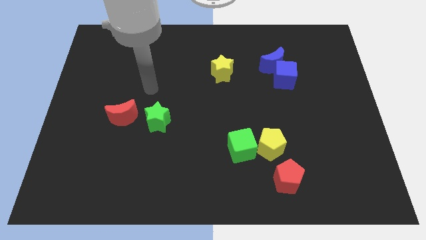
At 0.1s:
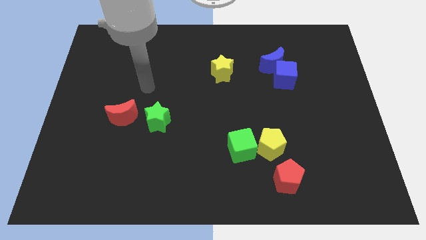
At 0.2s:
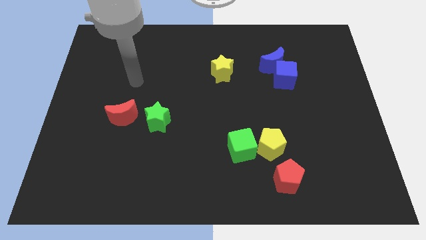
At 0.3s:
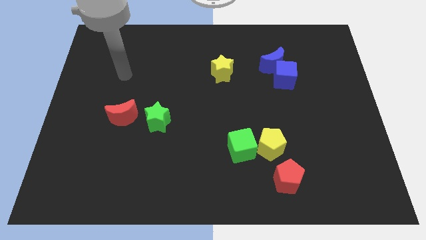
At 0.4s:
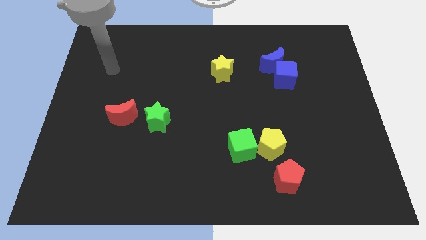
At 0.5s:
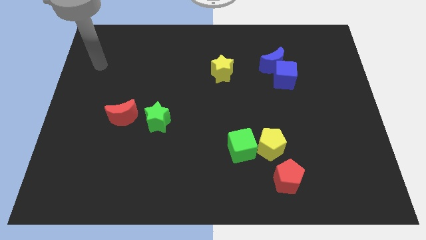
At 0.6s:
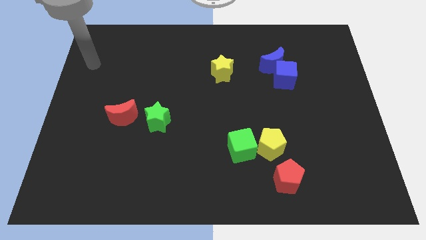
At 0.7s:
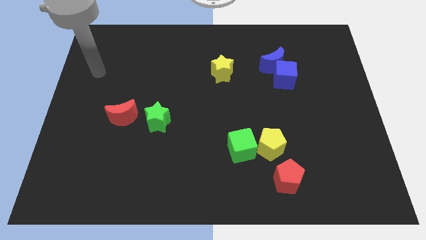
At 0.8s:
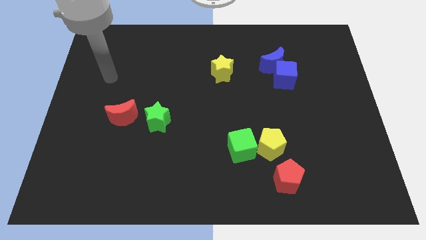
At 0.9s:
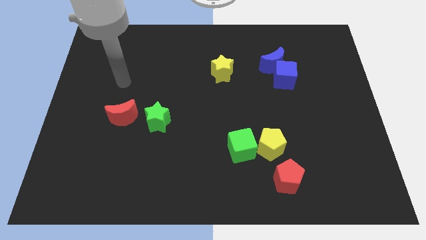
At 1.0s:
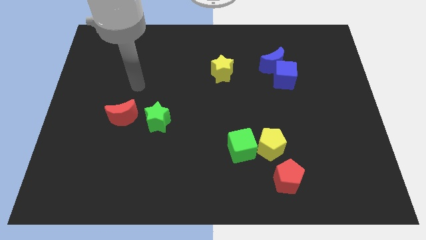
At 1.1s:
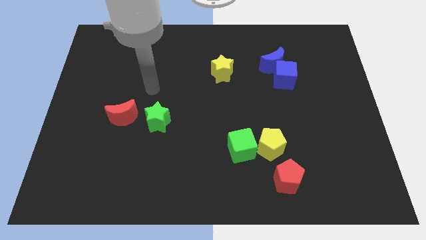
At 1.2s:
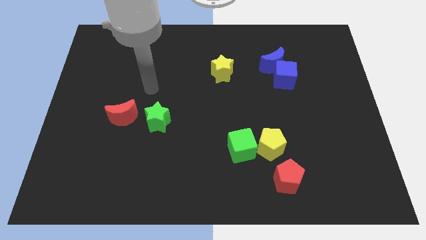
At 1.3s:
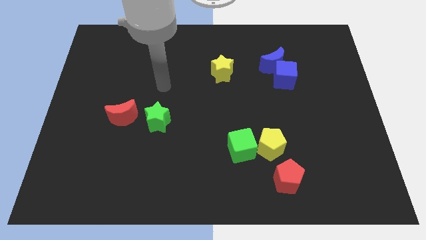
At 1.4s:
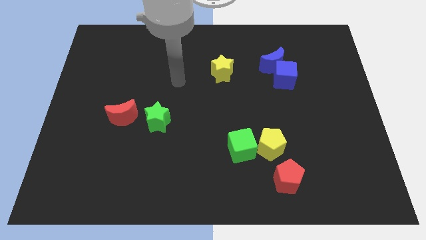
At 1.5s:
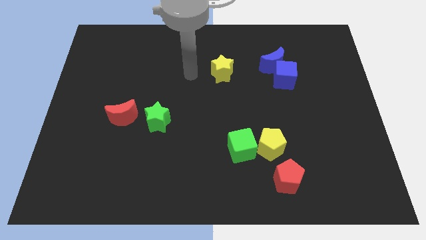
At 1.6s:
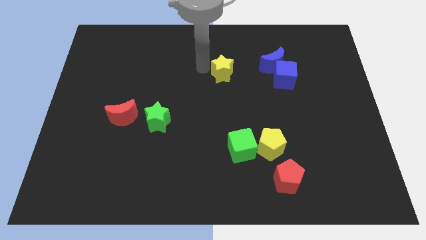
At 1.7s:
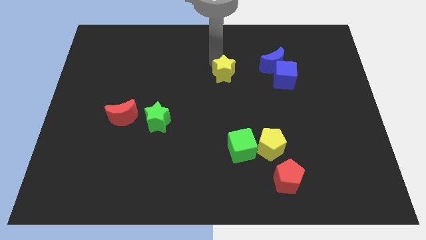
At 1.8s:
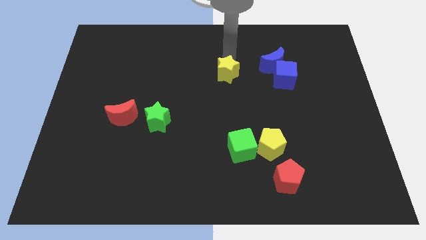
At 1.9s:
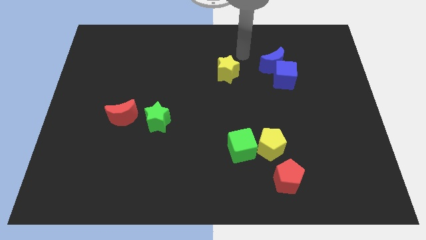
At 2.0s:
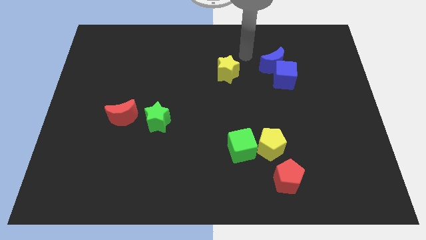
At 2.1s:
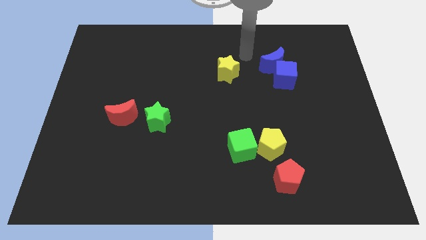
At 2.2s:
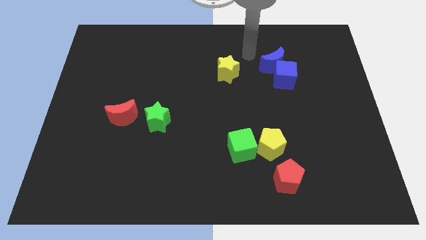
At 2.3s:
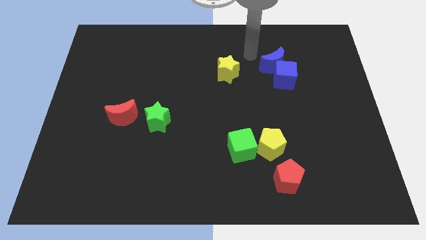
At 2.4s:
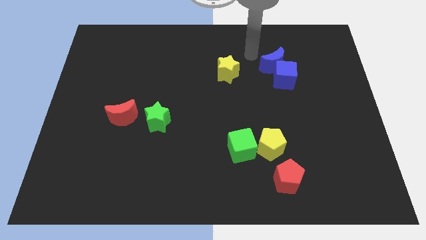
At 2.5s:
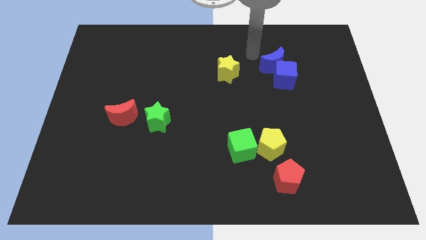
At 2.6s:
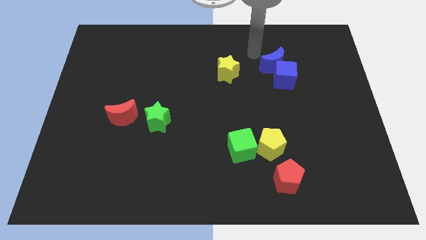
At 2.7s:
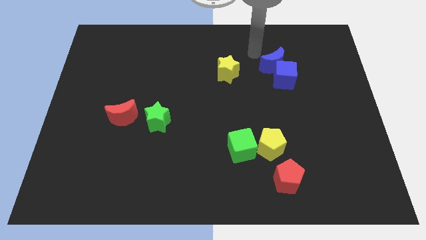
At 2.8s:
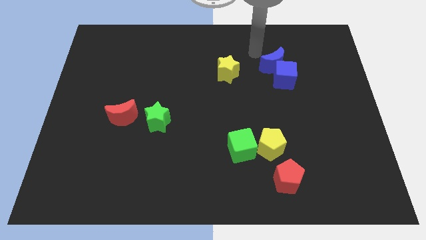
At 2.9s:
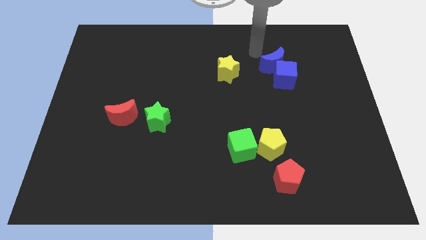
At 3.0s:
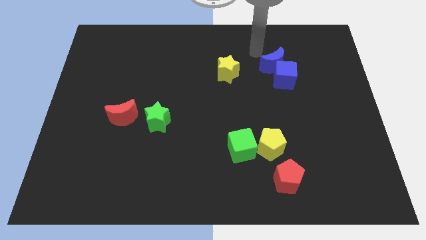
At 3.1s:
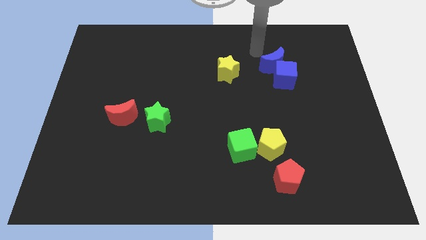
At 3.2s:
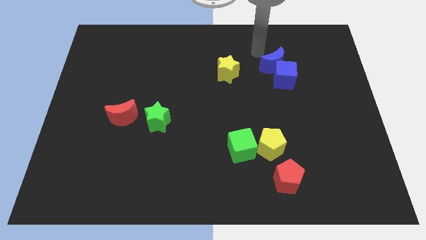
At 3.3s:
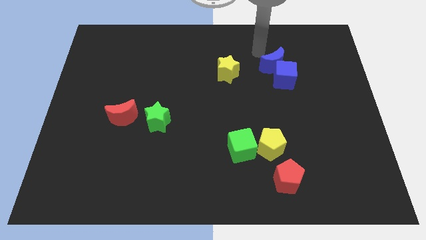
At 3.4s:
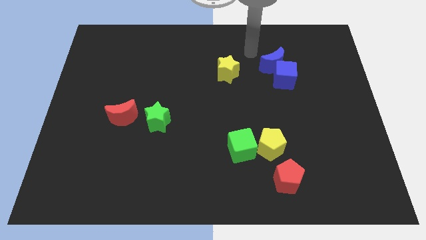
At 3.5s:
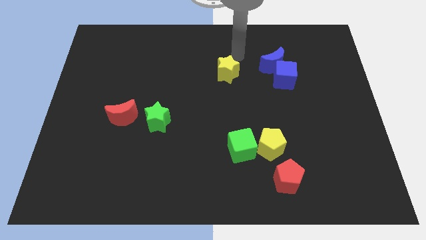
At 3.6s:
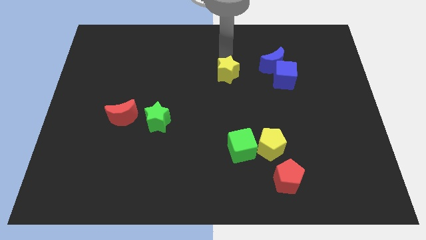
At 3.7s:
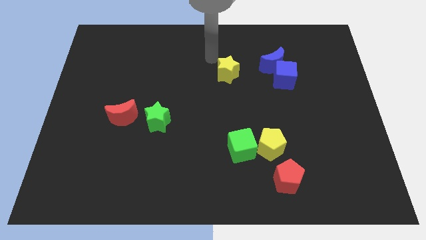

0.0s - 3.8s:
tap the yellow star

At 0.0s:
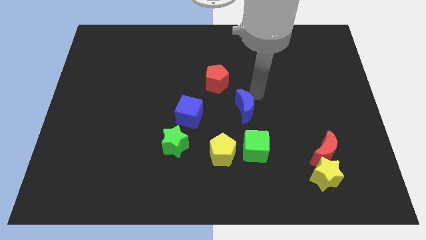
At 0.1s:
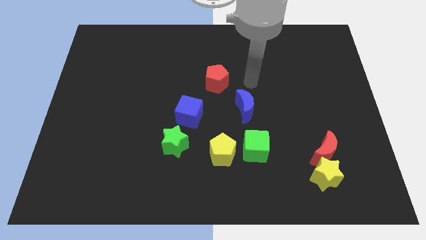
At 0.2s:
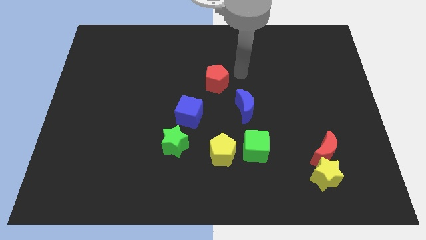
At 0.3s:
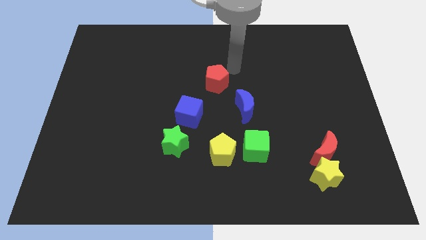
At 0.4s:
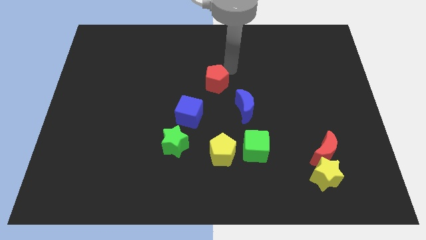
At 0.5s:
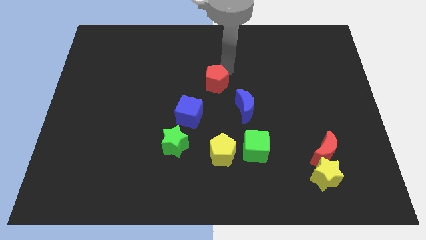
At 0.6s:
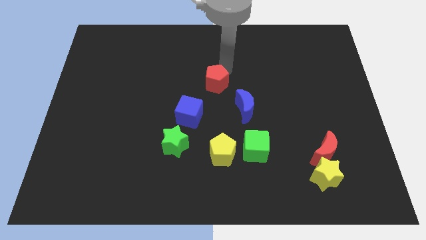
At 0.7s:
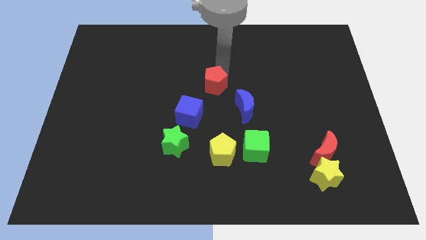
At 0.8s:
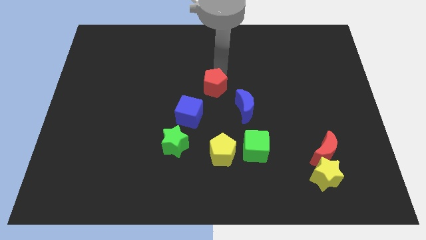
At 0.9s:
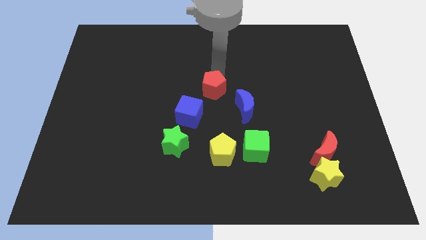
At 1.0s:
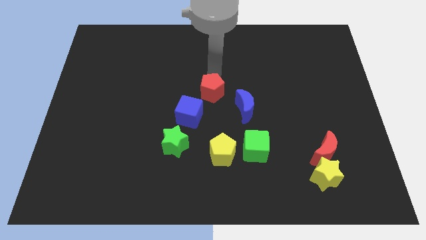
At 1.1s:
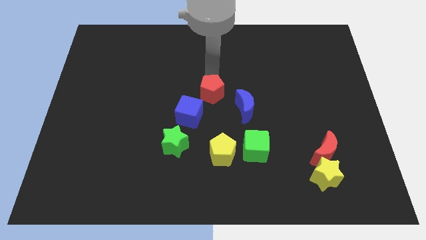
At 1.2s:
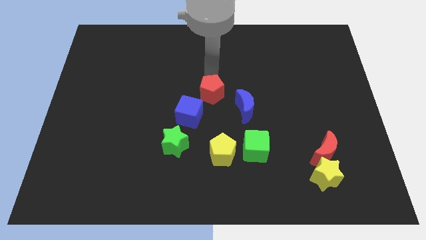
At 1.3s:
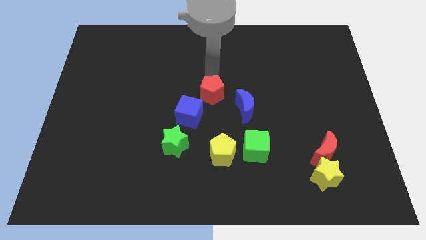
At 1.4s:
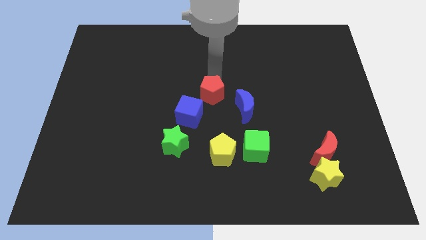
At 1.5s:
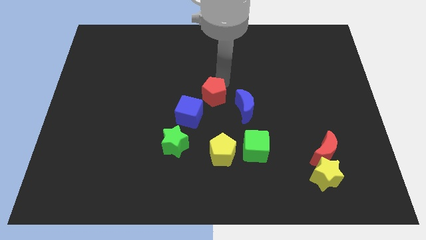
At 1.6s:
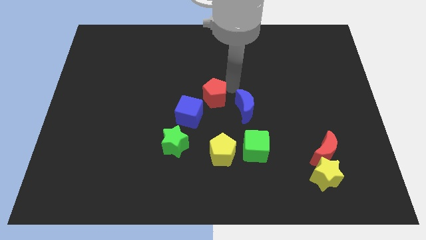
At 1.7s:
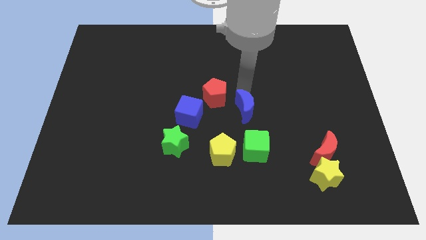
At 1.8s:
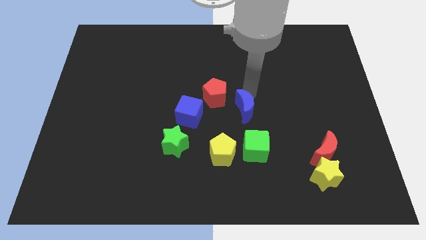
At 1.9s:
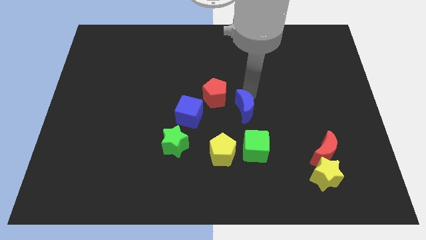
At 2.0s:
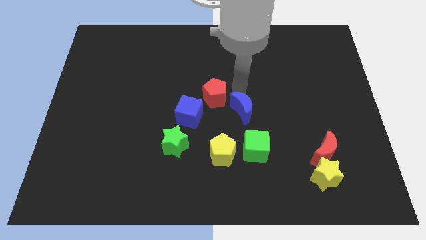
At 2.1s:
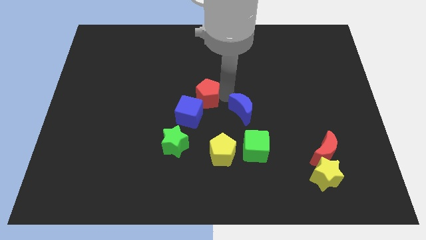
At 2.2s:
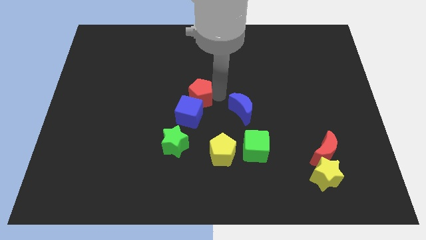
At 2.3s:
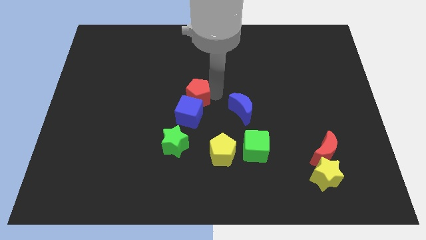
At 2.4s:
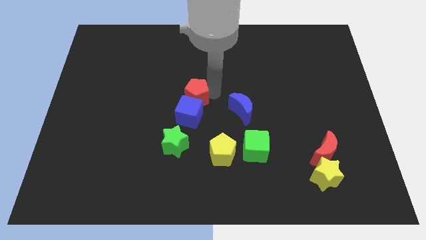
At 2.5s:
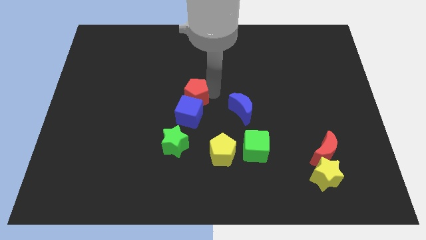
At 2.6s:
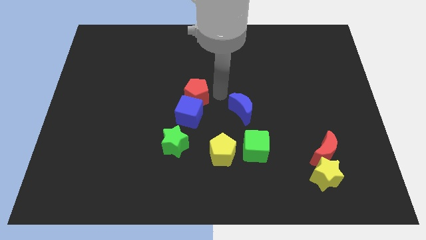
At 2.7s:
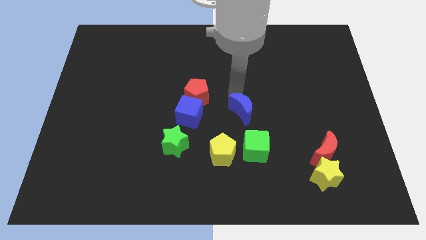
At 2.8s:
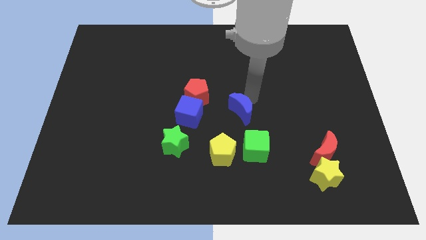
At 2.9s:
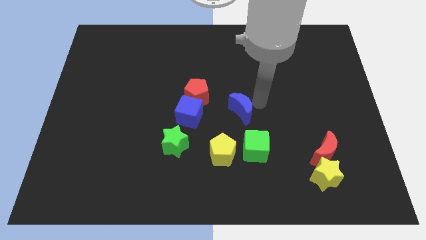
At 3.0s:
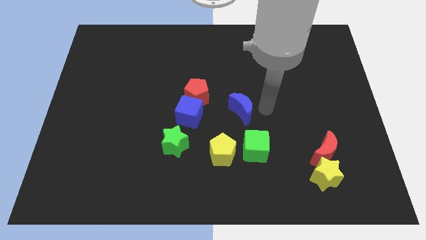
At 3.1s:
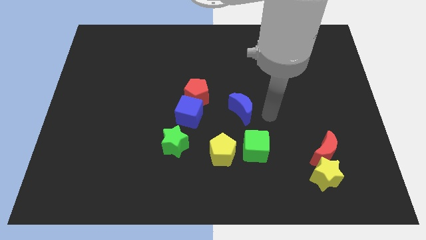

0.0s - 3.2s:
put the red pentagon at the top of the blue cube

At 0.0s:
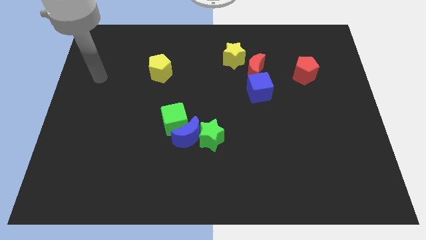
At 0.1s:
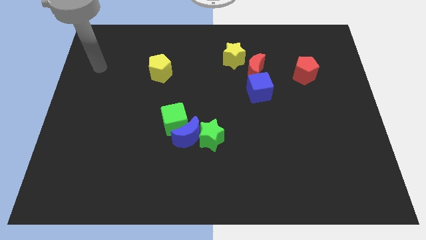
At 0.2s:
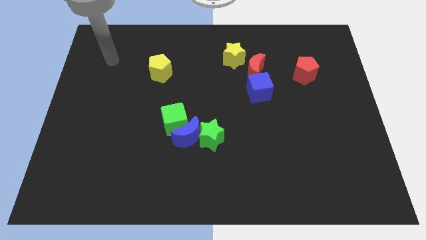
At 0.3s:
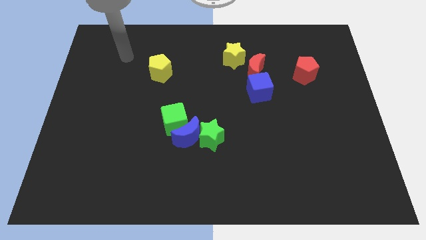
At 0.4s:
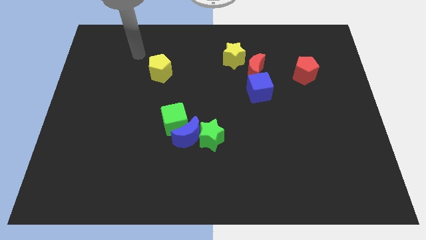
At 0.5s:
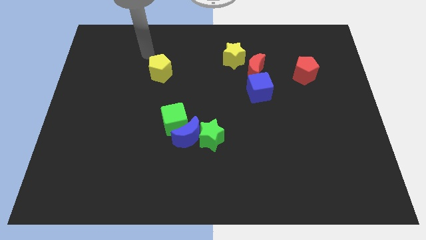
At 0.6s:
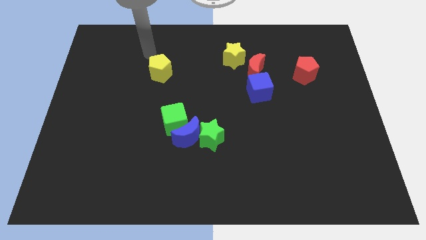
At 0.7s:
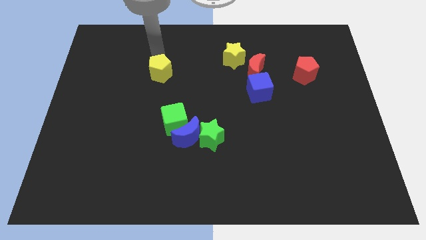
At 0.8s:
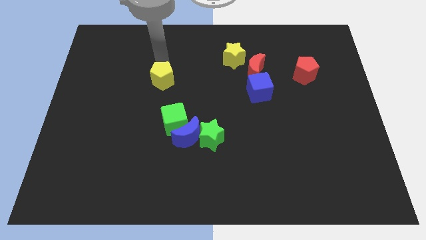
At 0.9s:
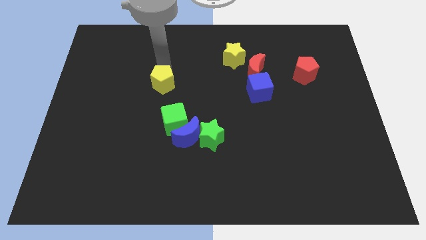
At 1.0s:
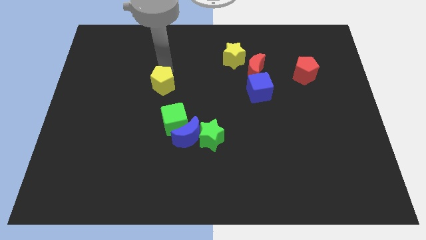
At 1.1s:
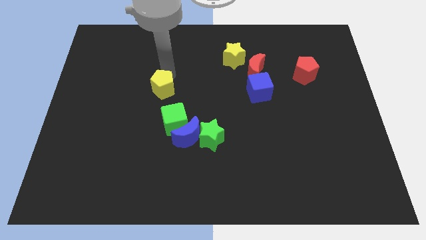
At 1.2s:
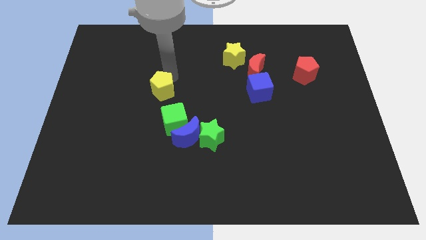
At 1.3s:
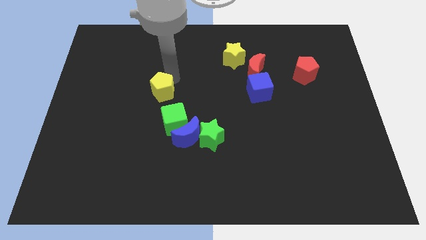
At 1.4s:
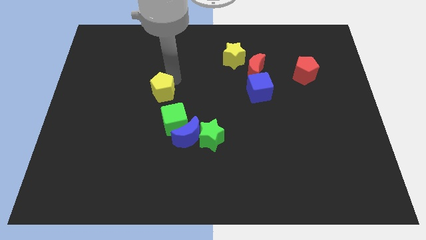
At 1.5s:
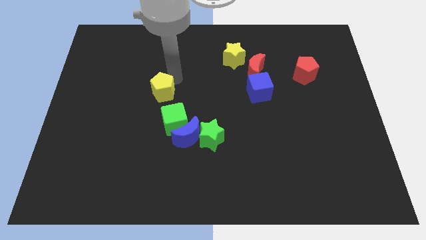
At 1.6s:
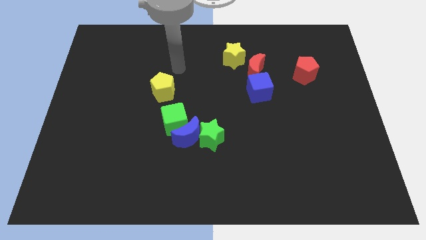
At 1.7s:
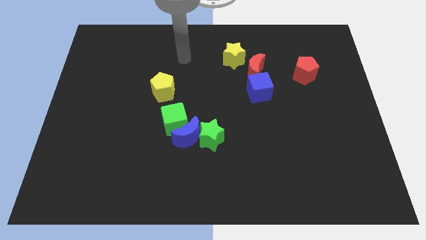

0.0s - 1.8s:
push the yellow pentagon above green cube

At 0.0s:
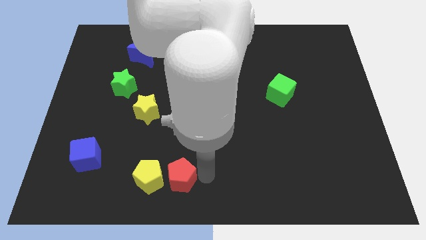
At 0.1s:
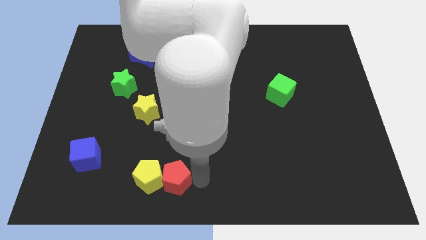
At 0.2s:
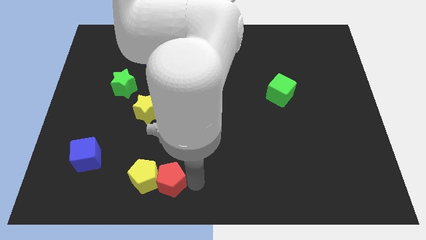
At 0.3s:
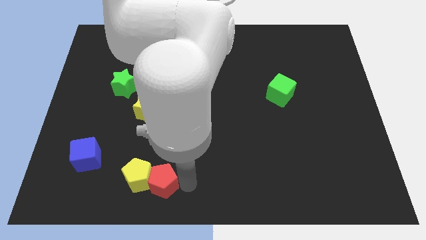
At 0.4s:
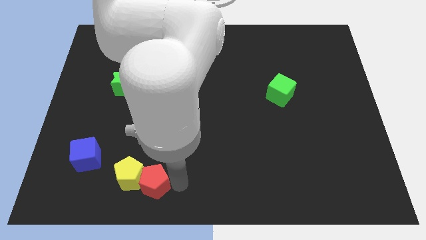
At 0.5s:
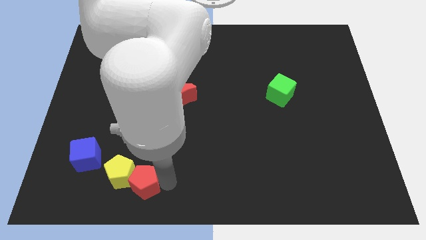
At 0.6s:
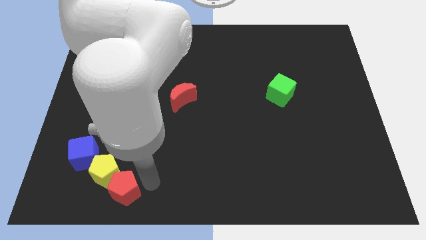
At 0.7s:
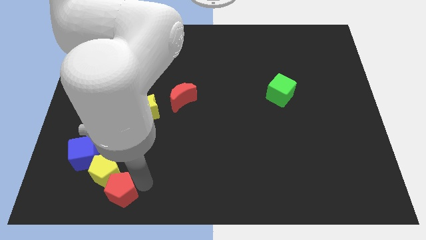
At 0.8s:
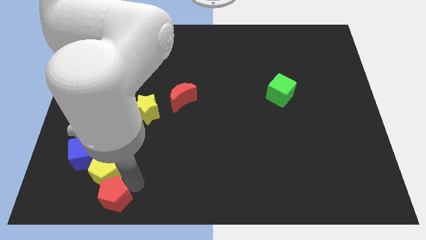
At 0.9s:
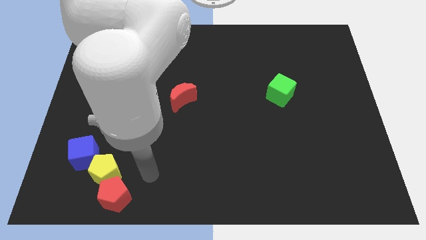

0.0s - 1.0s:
place the yellow pentagon and red pentagon at the bottom right side of blue cube
